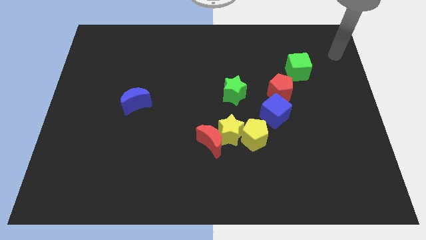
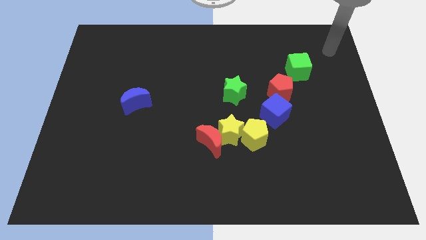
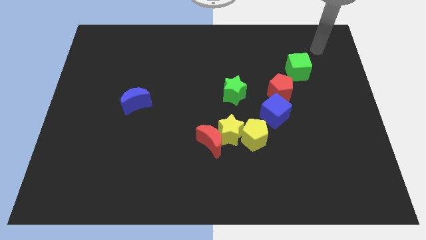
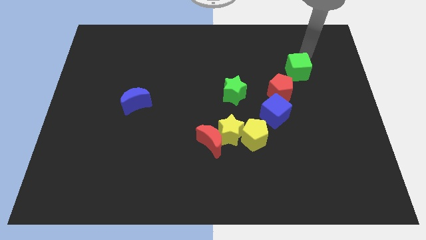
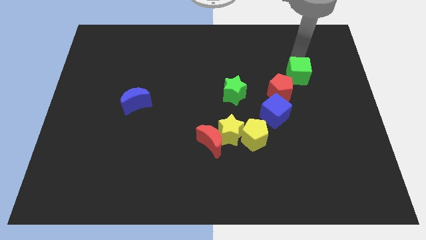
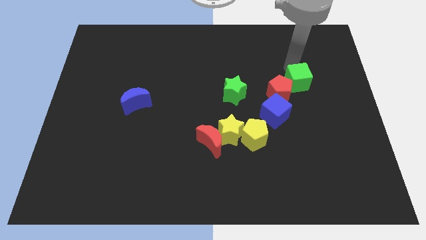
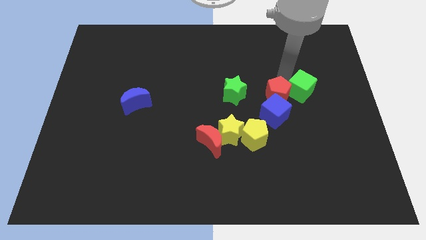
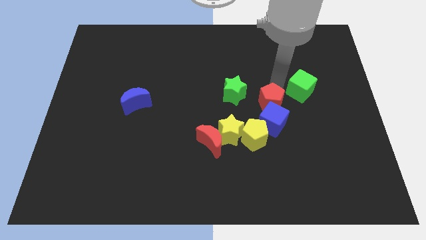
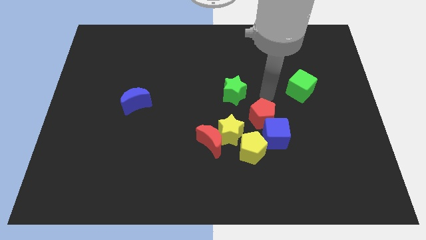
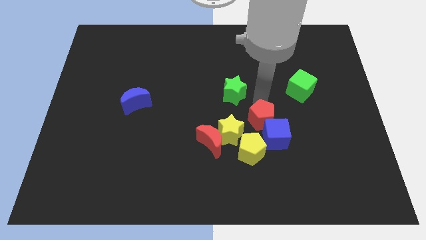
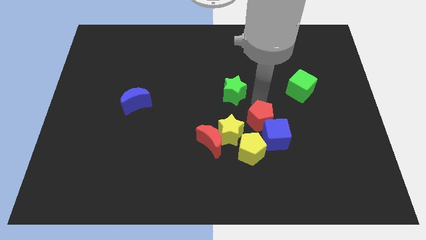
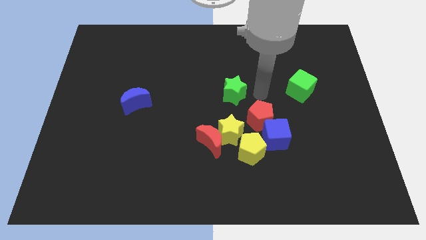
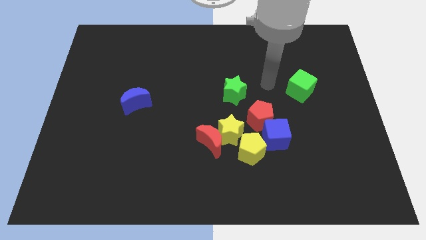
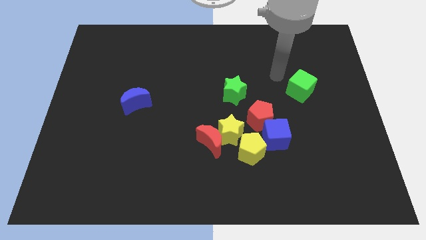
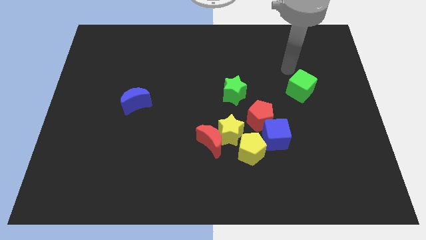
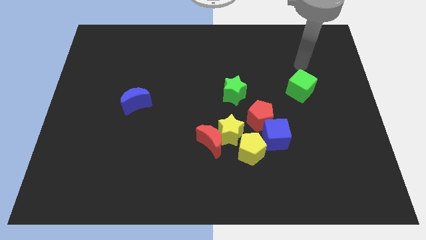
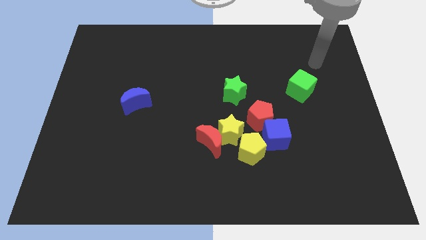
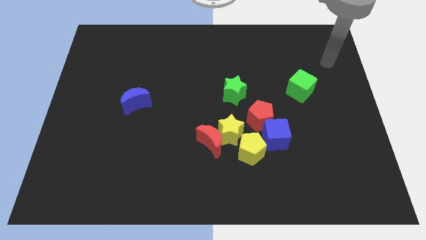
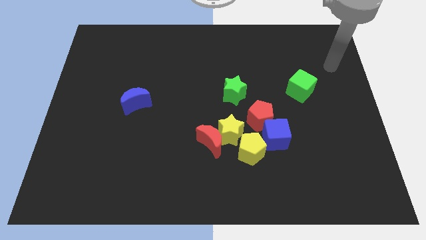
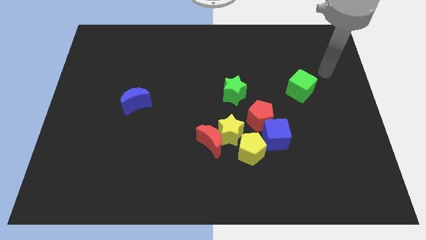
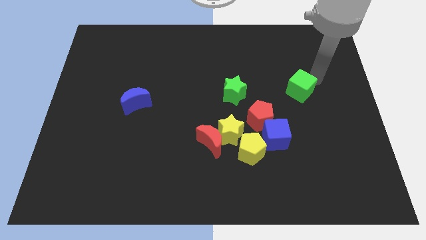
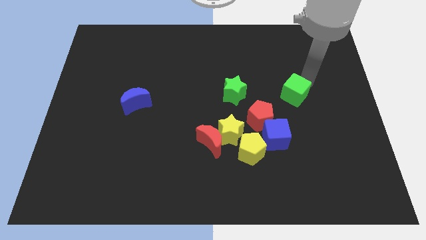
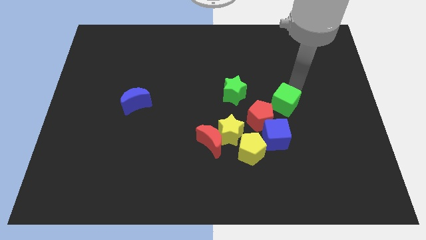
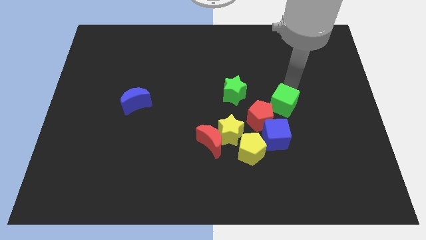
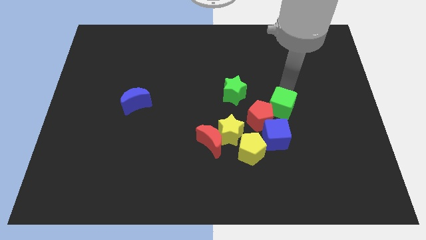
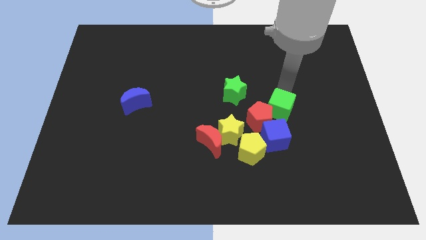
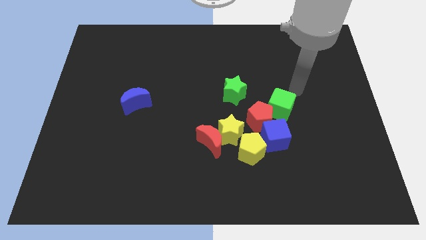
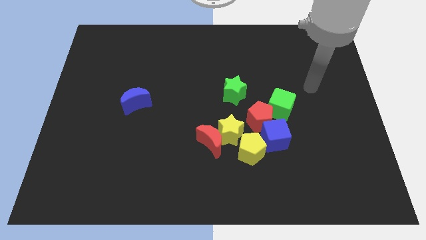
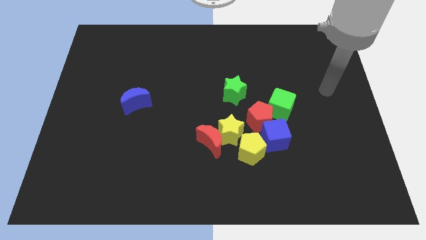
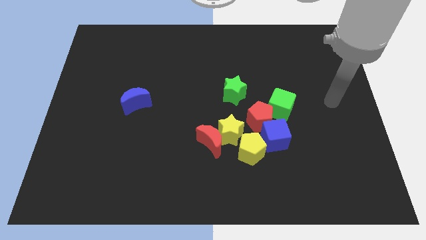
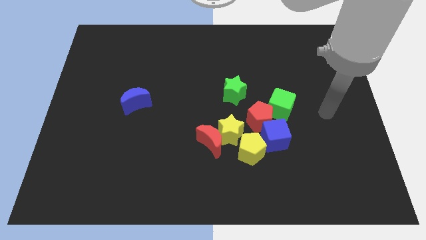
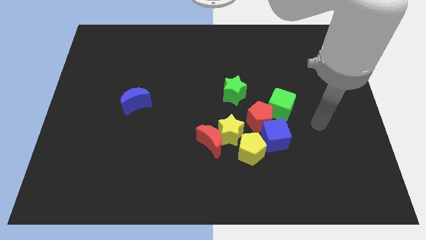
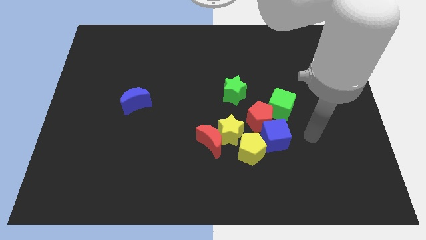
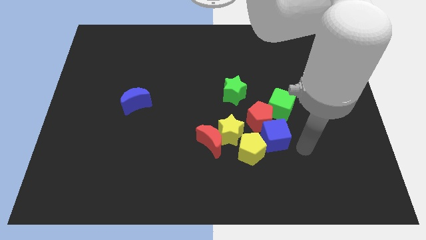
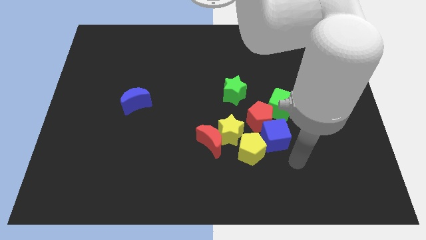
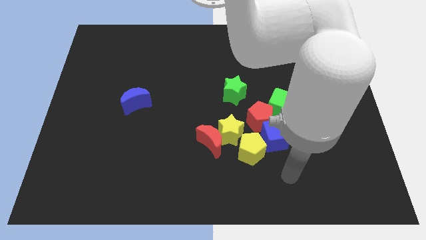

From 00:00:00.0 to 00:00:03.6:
push the green cube to the right side of the red pentagon

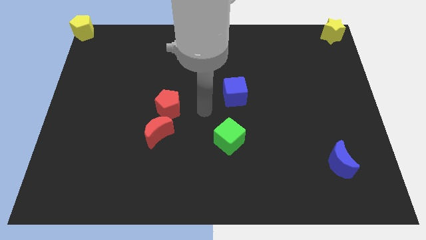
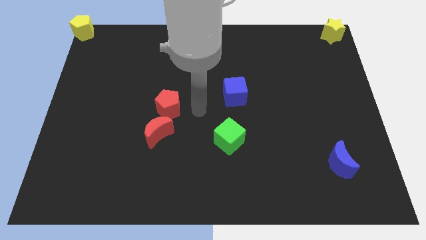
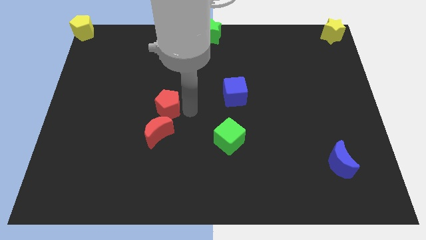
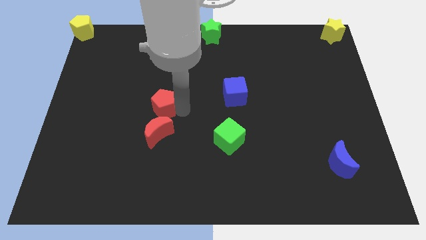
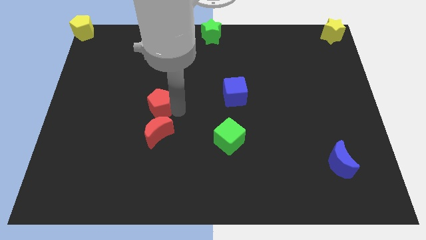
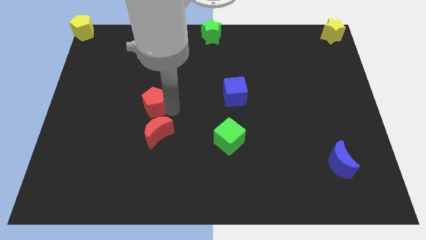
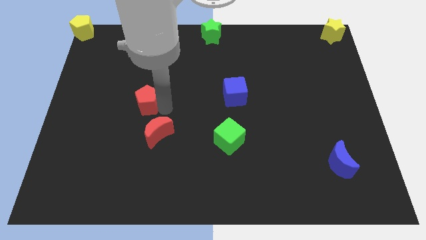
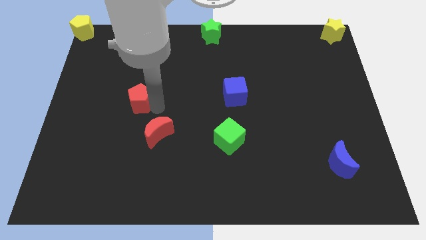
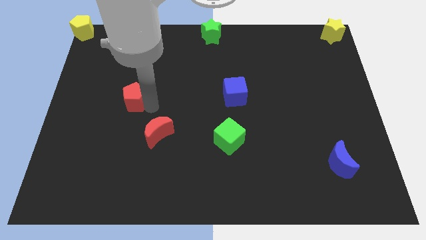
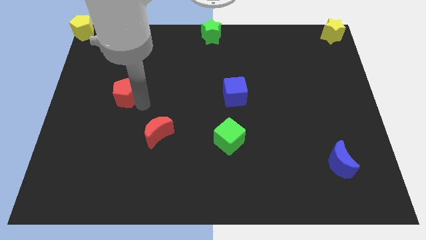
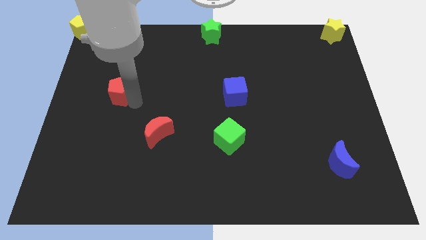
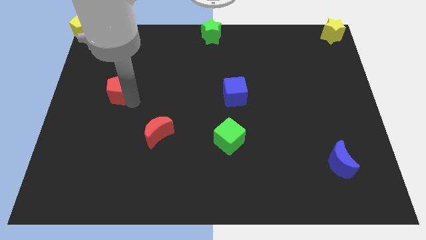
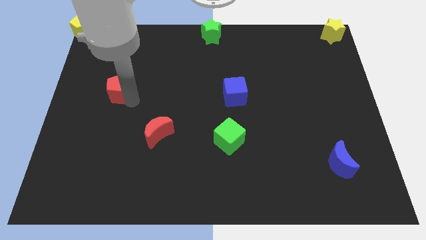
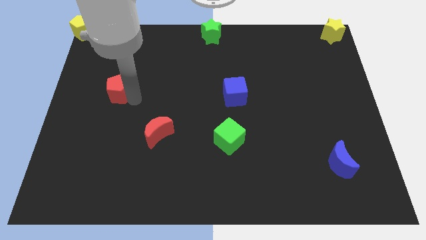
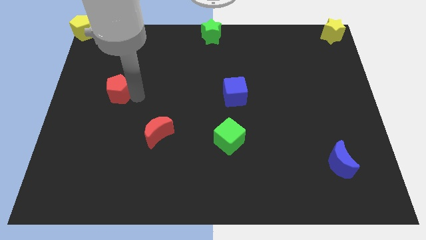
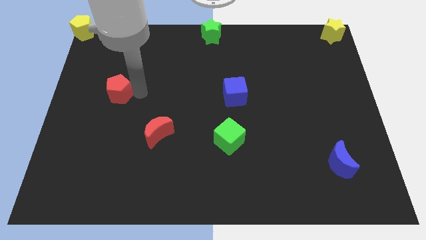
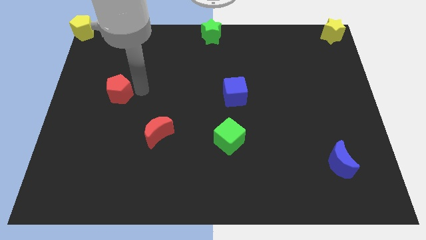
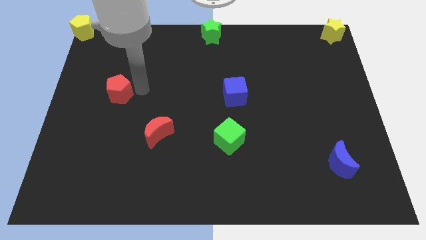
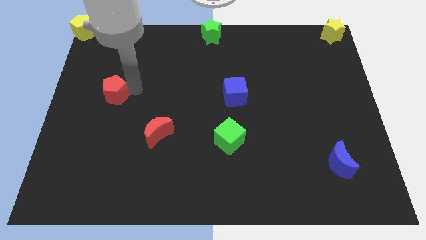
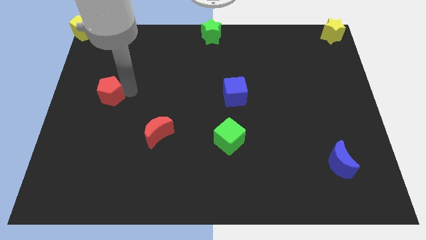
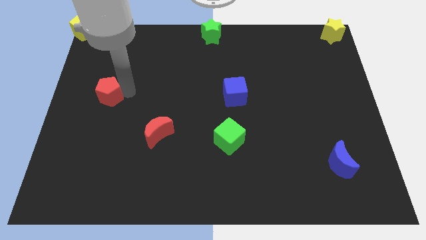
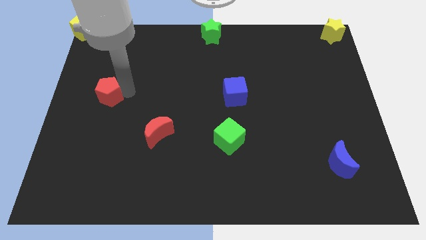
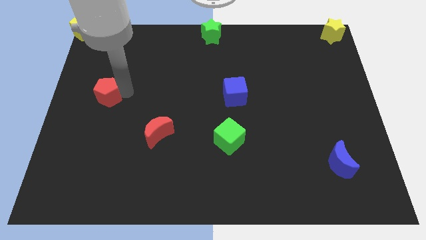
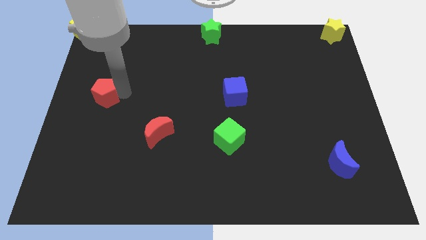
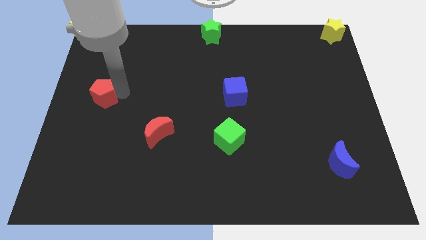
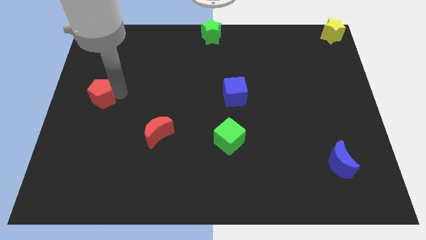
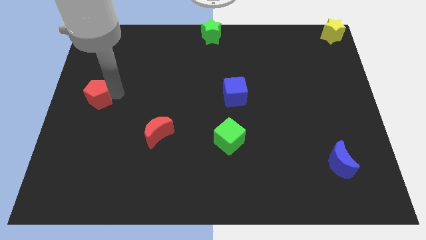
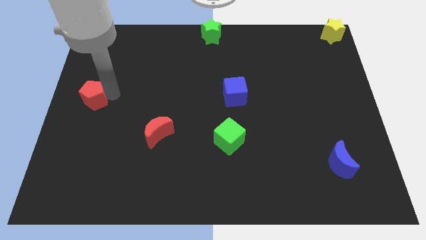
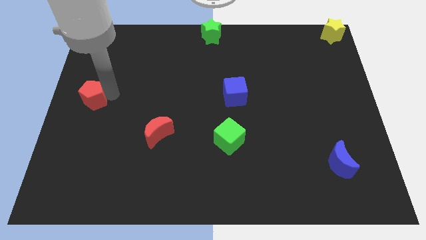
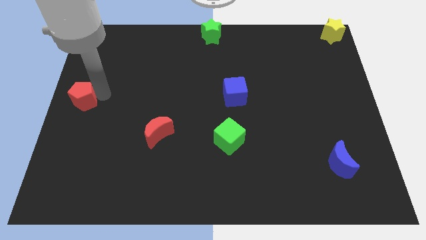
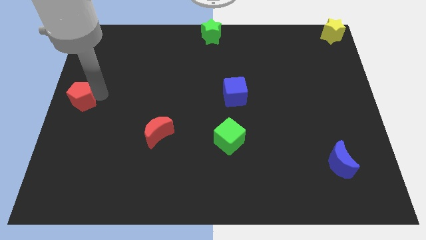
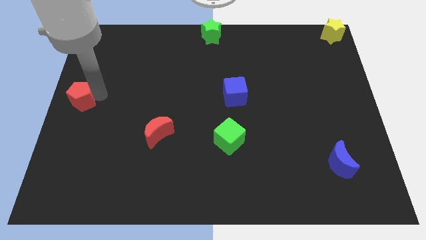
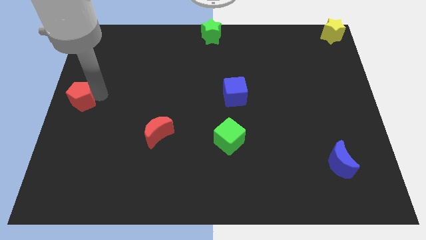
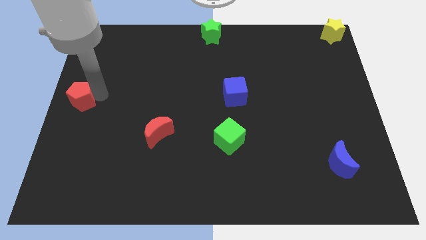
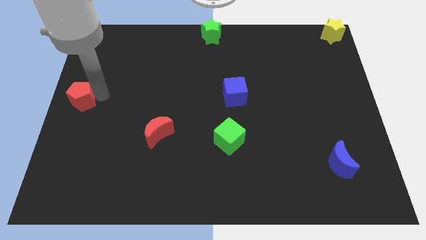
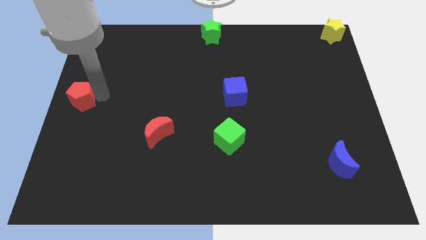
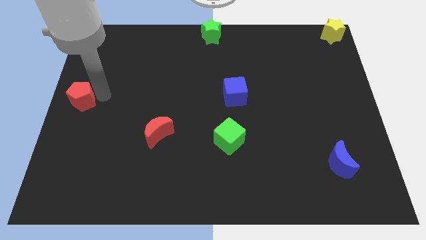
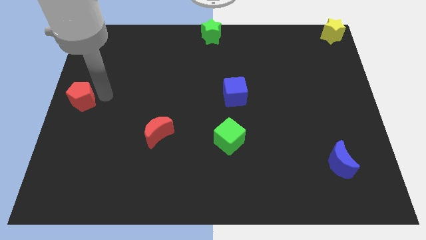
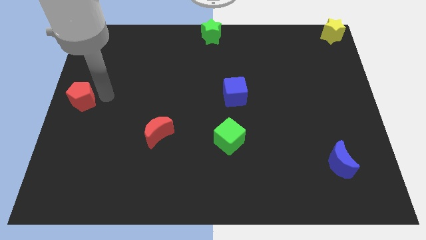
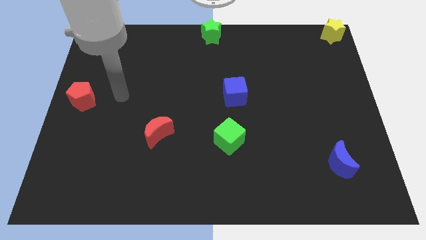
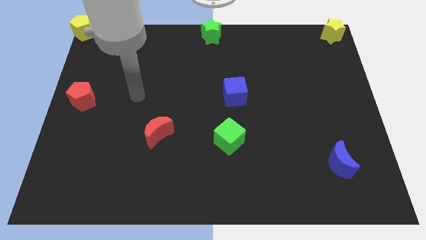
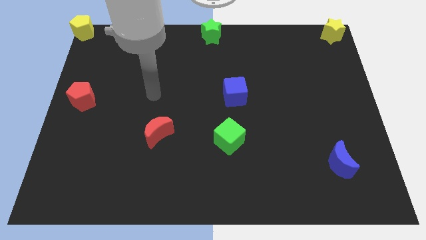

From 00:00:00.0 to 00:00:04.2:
push the red pentagon towards the left side of the board

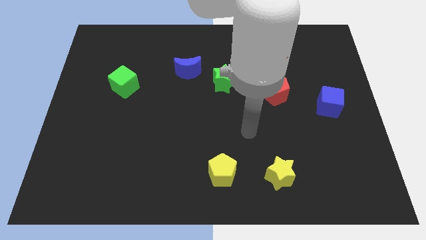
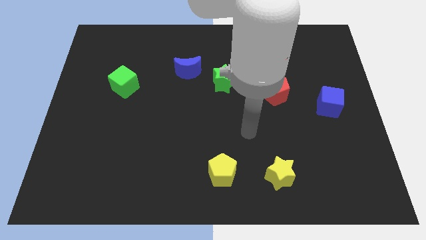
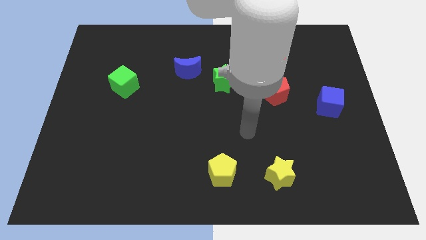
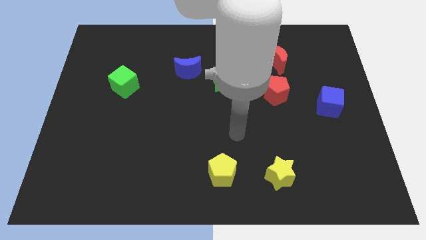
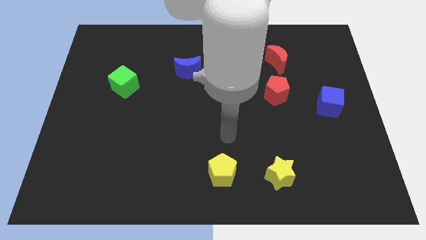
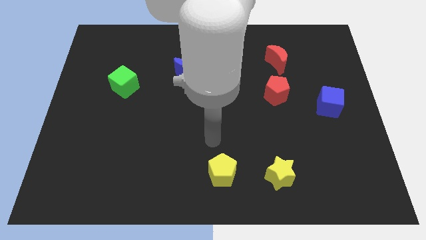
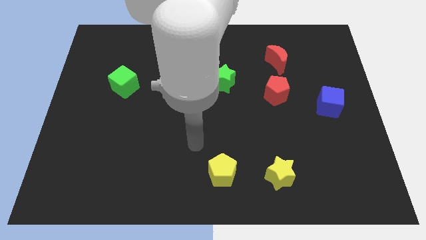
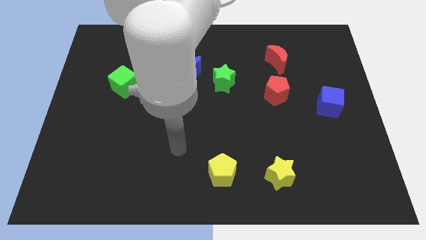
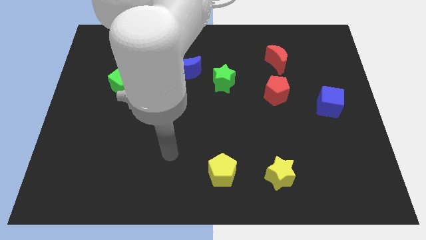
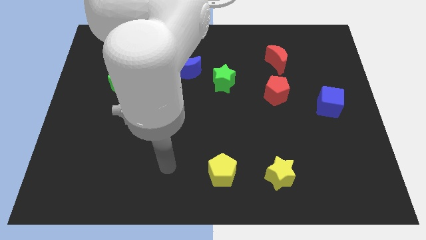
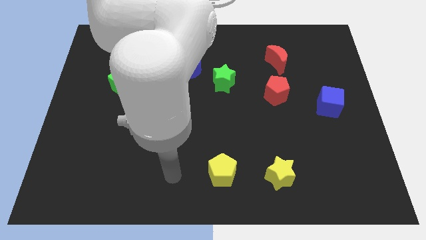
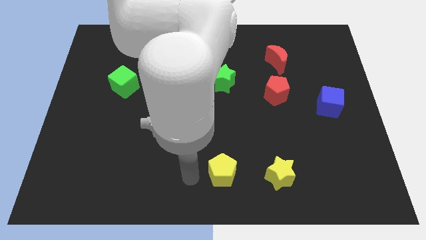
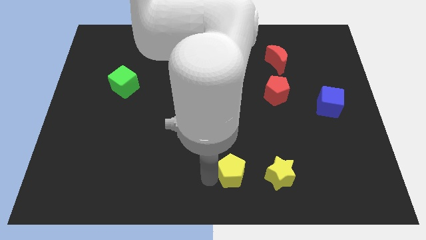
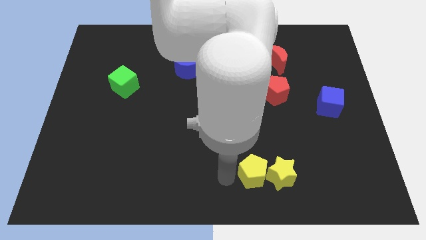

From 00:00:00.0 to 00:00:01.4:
touch the left of the yellow pentagon
